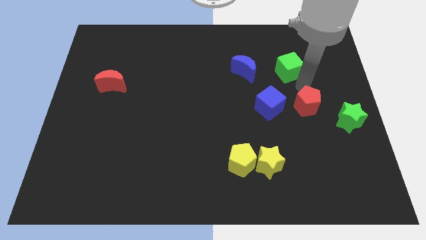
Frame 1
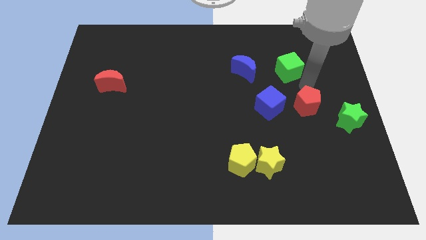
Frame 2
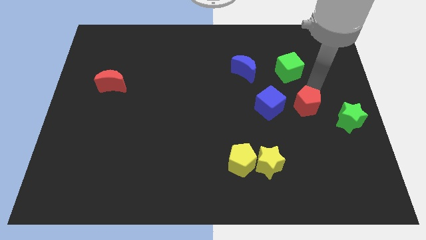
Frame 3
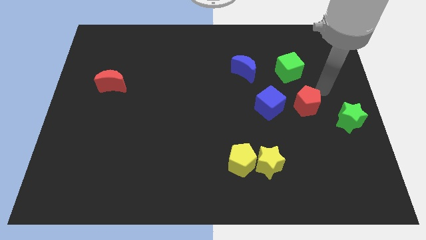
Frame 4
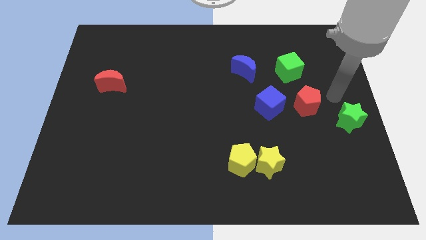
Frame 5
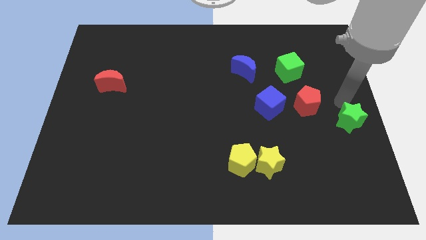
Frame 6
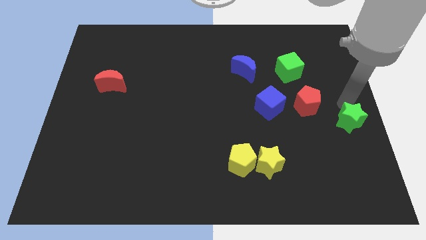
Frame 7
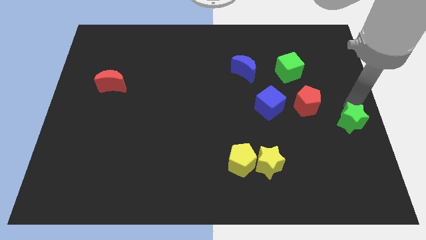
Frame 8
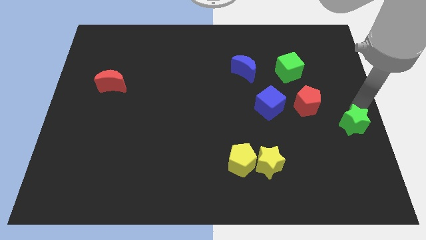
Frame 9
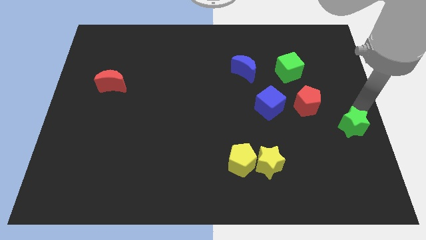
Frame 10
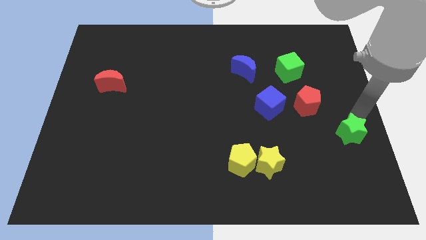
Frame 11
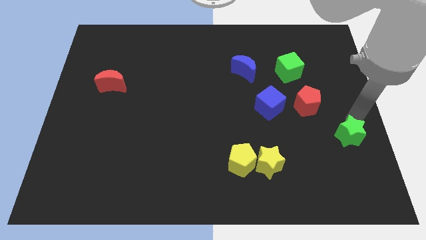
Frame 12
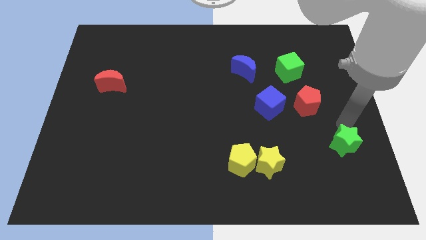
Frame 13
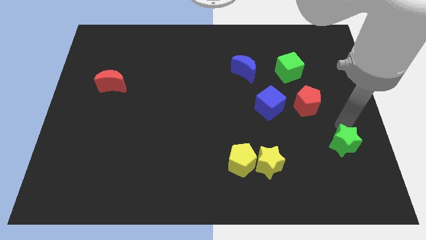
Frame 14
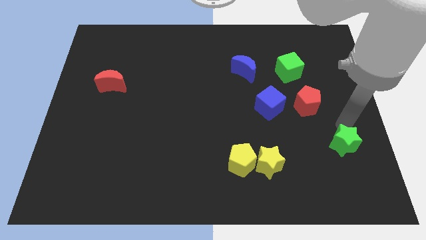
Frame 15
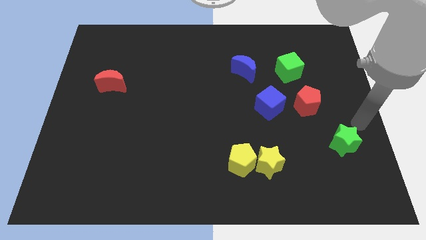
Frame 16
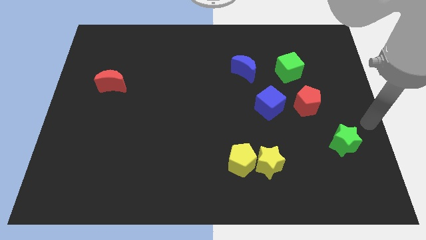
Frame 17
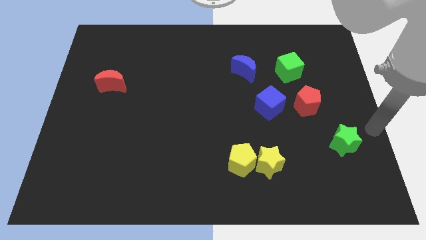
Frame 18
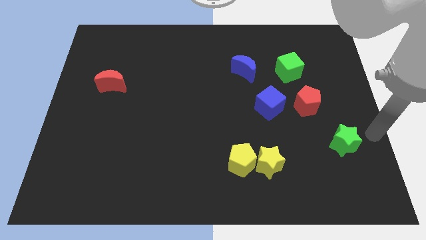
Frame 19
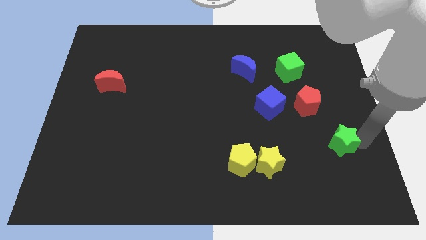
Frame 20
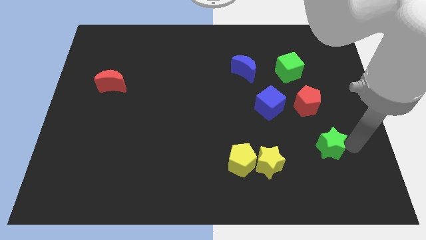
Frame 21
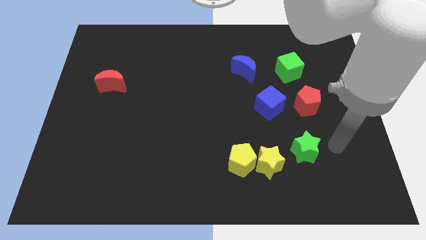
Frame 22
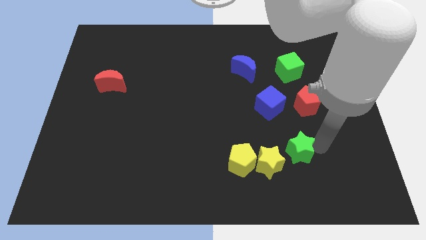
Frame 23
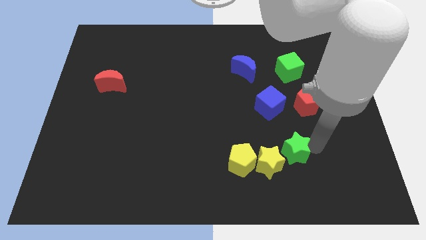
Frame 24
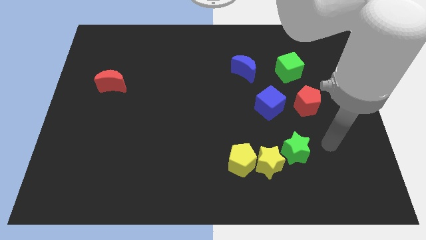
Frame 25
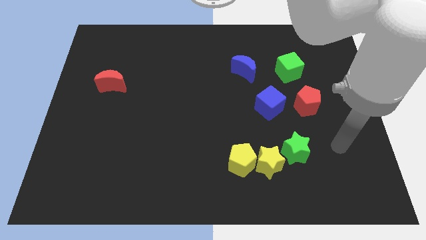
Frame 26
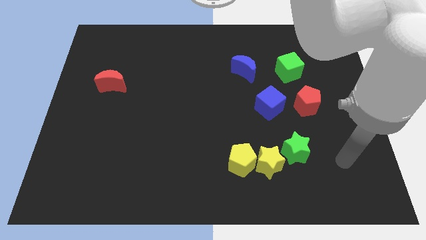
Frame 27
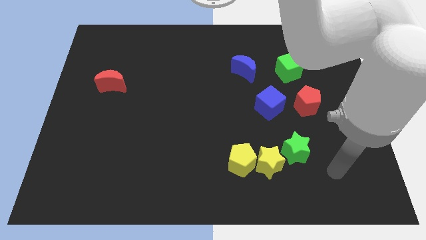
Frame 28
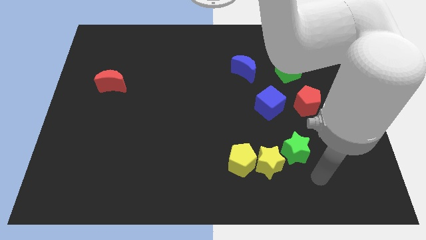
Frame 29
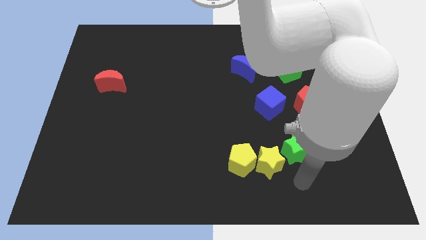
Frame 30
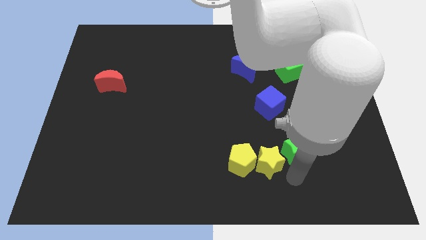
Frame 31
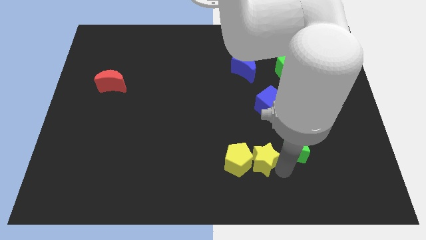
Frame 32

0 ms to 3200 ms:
move green star towards the yellow star

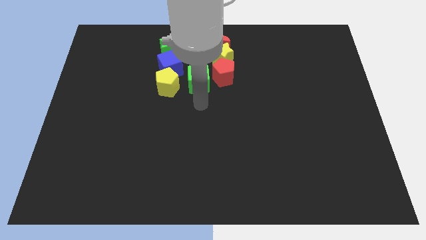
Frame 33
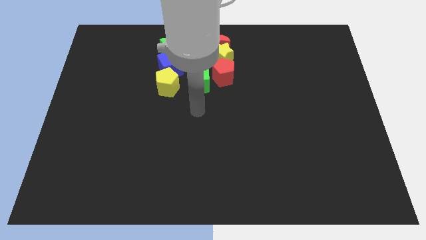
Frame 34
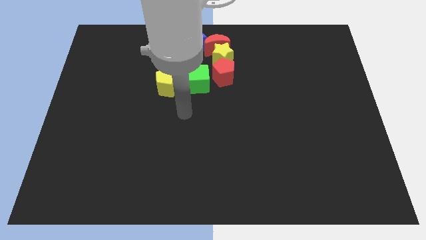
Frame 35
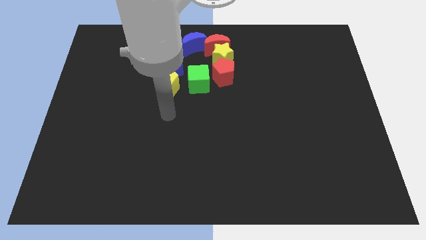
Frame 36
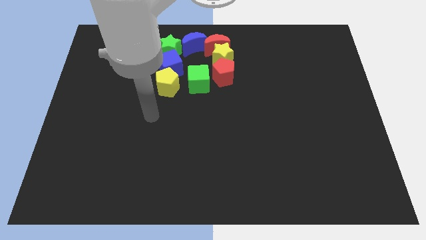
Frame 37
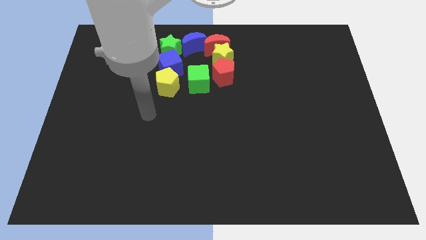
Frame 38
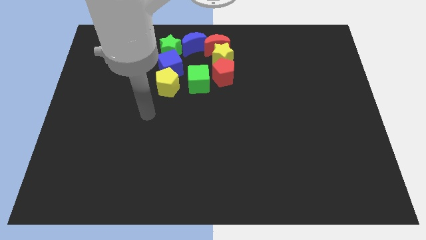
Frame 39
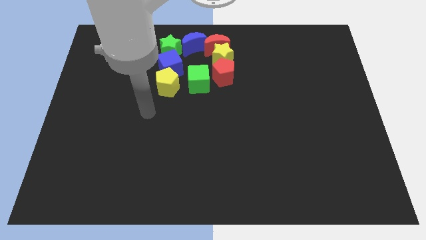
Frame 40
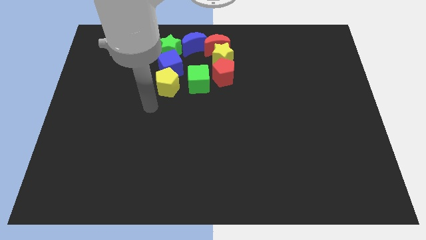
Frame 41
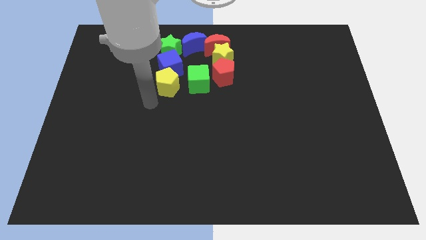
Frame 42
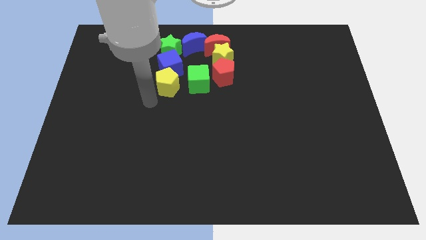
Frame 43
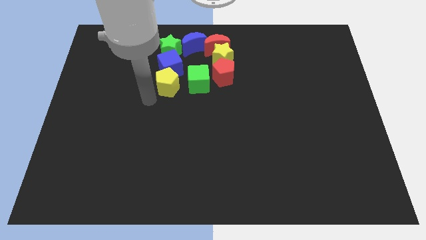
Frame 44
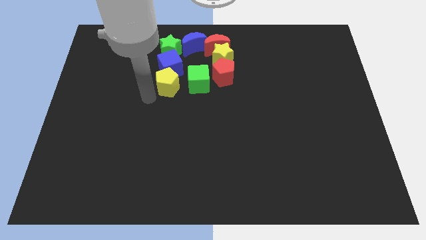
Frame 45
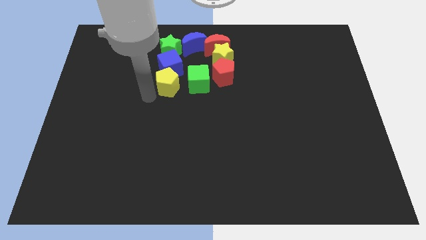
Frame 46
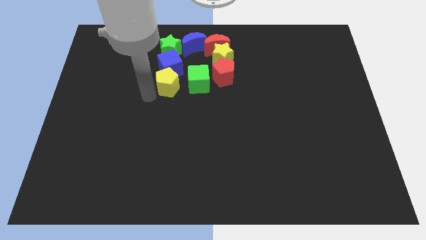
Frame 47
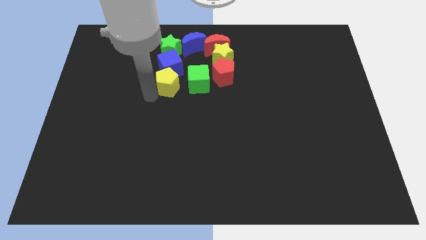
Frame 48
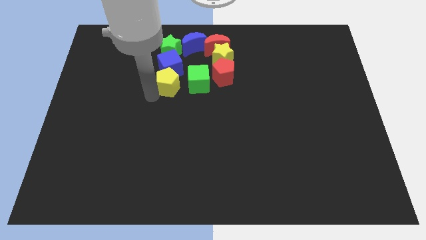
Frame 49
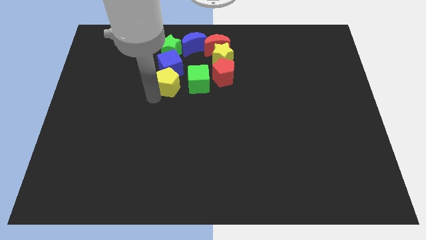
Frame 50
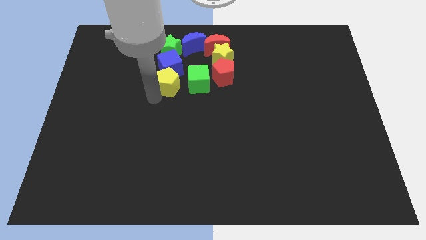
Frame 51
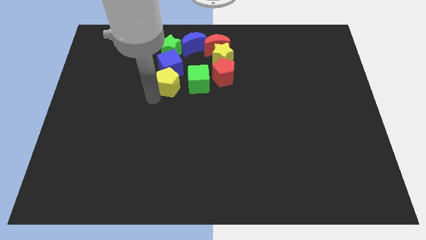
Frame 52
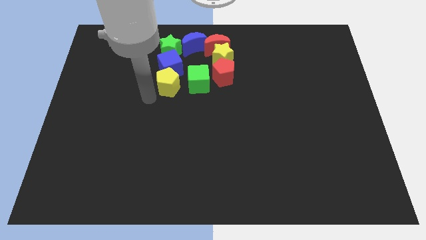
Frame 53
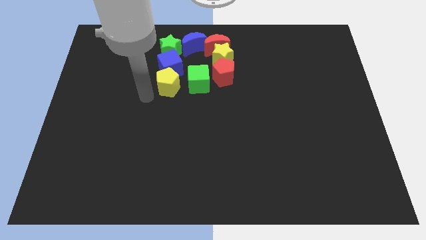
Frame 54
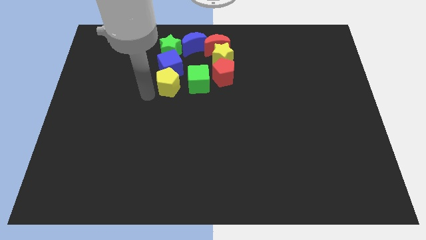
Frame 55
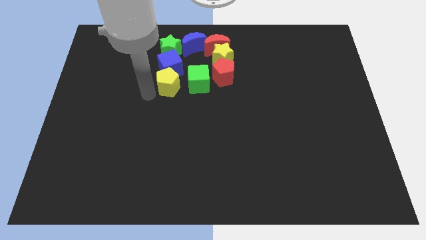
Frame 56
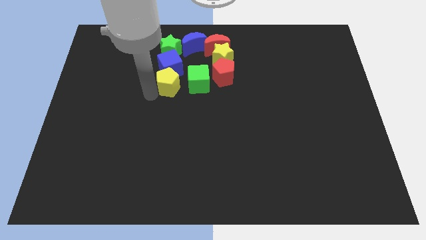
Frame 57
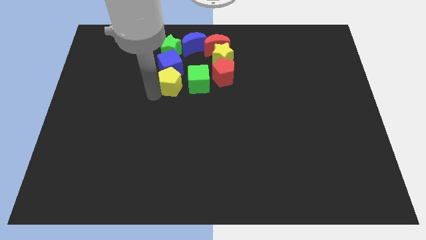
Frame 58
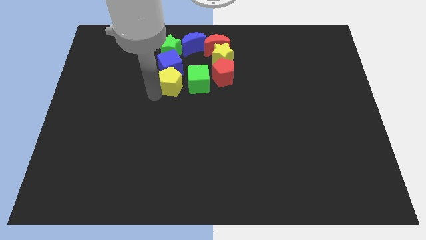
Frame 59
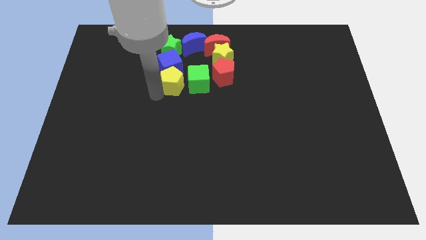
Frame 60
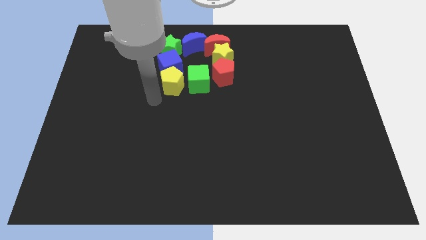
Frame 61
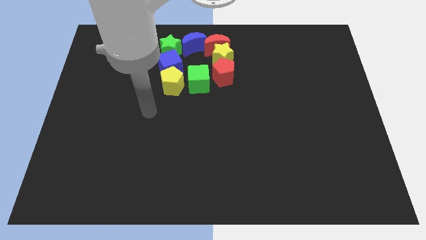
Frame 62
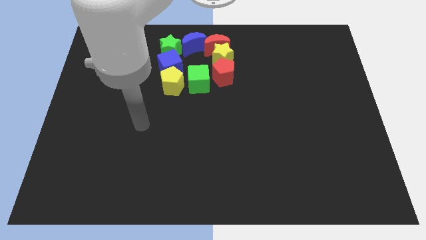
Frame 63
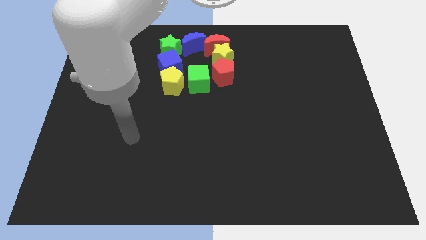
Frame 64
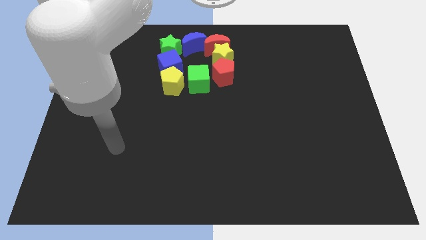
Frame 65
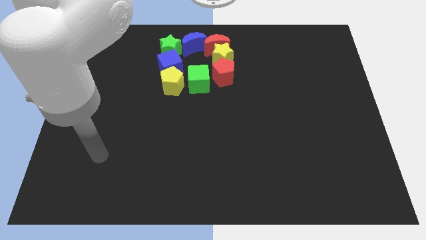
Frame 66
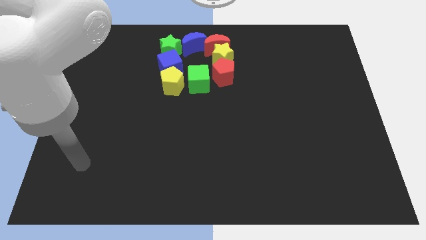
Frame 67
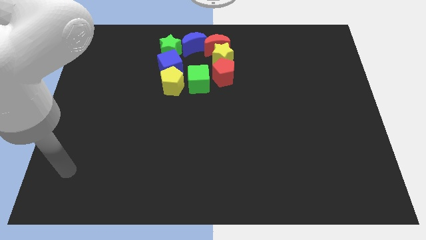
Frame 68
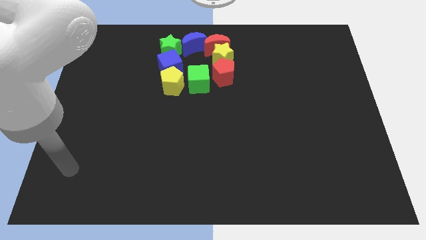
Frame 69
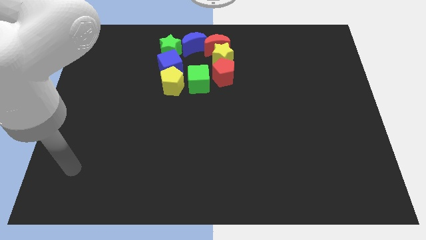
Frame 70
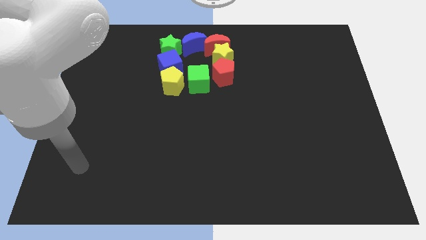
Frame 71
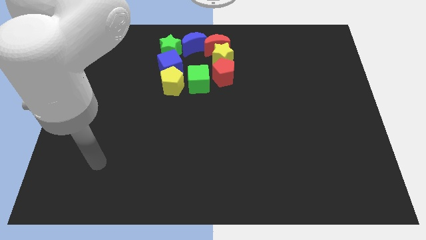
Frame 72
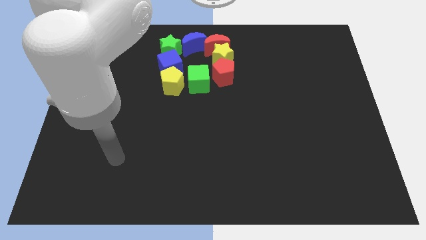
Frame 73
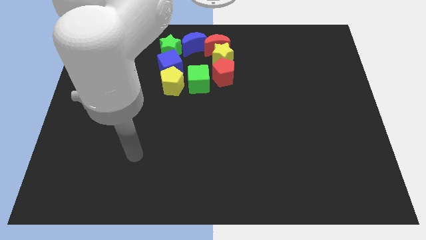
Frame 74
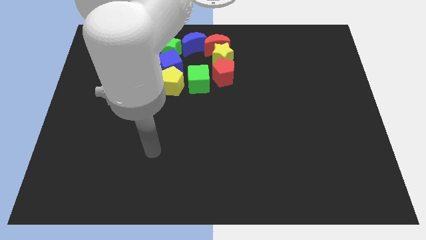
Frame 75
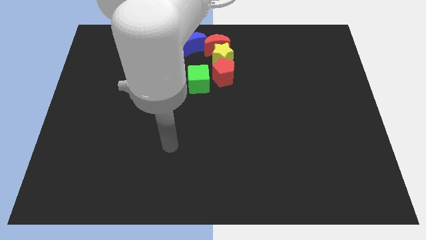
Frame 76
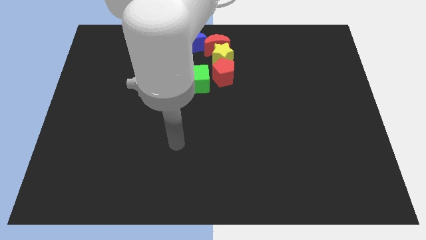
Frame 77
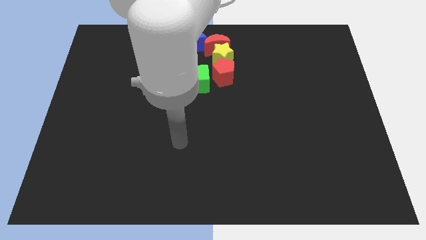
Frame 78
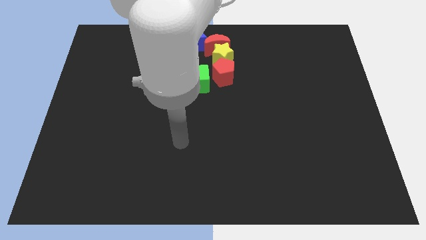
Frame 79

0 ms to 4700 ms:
push the yellow pentagon near to the green block

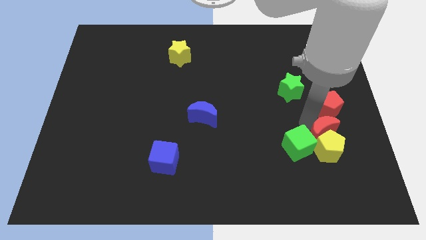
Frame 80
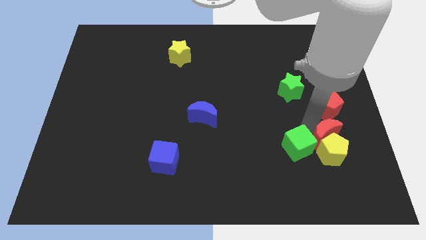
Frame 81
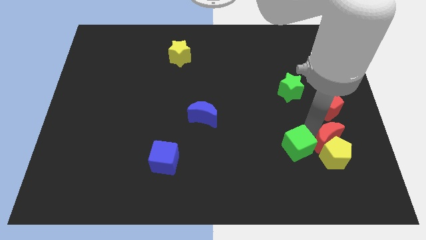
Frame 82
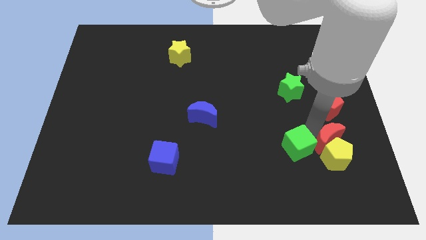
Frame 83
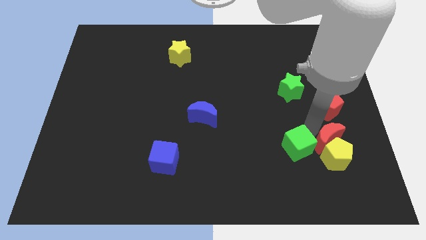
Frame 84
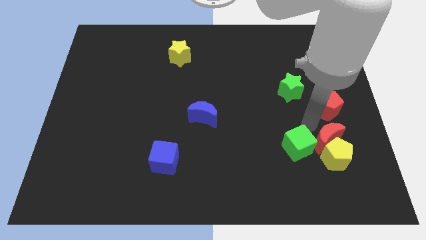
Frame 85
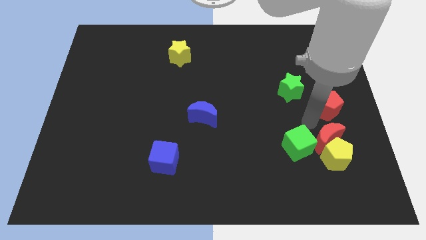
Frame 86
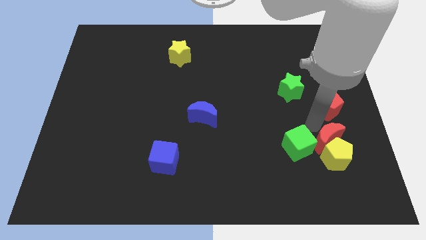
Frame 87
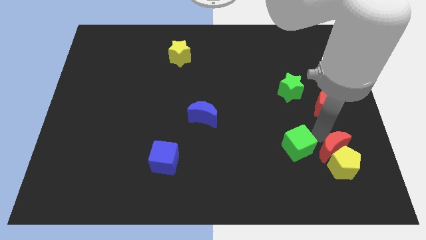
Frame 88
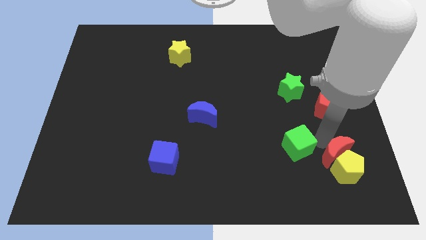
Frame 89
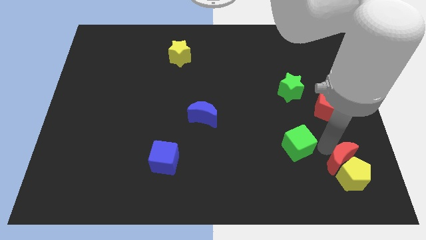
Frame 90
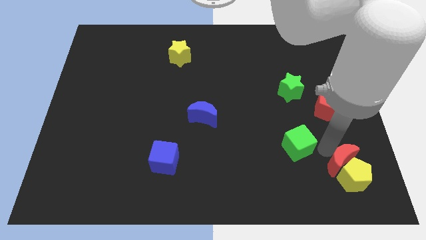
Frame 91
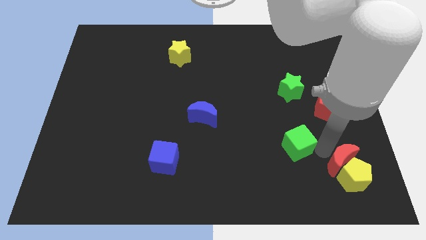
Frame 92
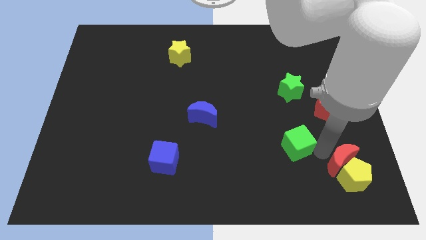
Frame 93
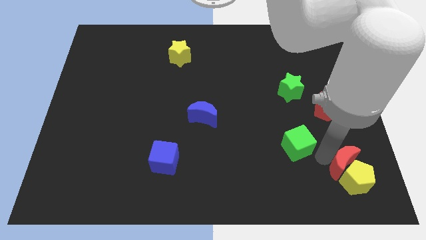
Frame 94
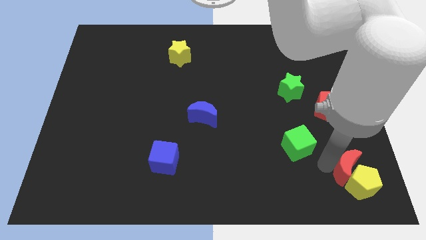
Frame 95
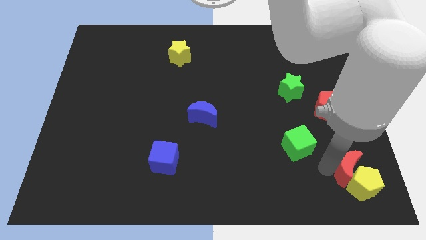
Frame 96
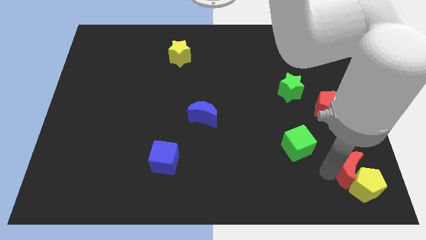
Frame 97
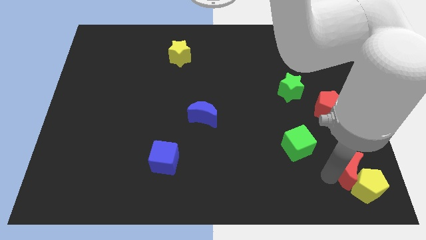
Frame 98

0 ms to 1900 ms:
separate the red crescent and yellow pentagon from the green cube
